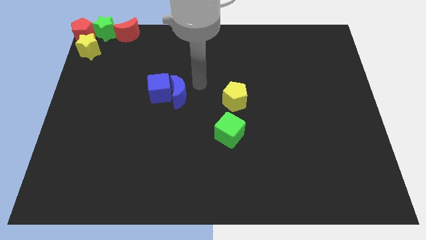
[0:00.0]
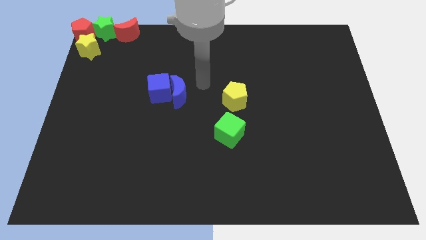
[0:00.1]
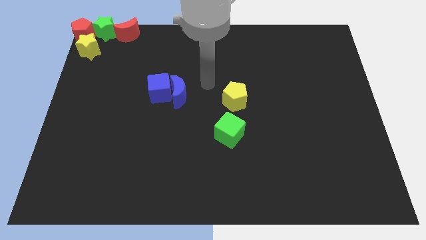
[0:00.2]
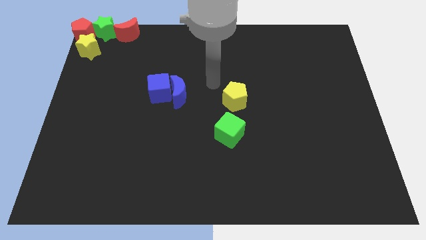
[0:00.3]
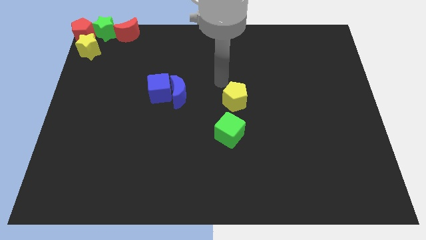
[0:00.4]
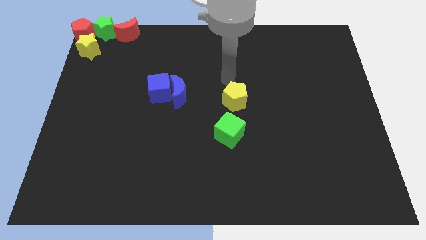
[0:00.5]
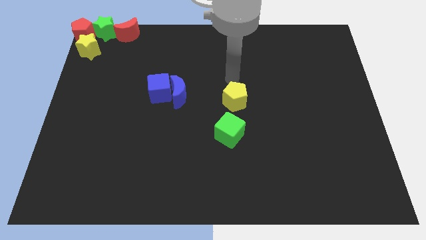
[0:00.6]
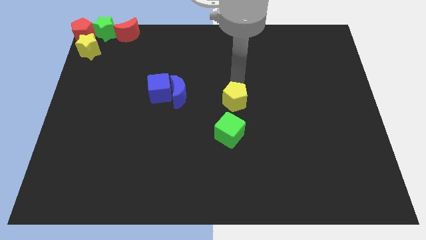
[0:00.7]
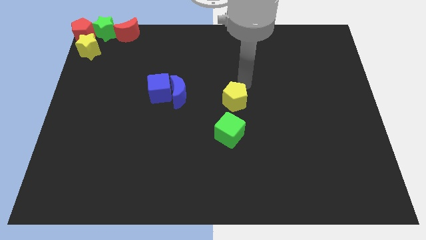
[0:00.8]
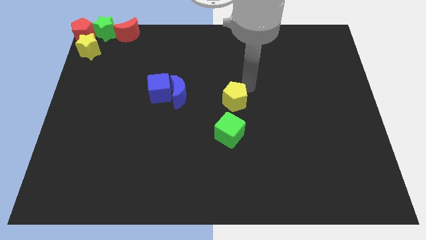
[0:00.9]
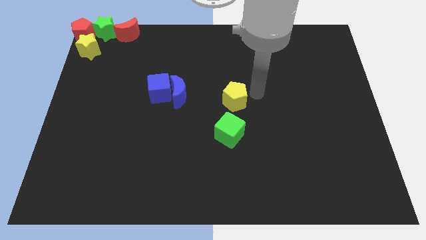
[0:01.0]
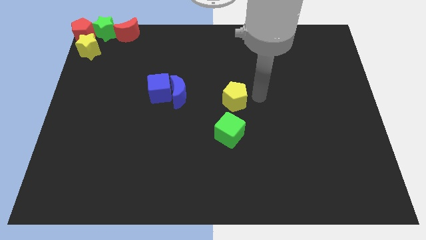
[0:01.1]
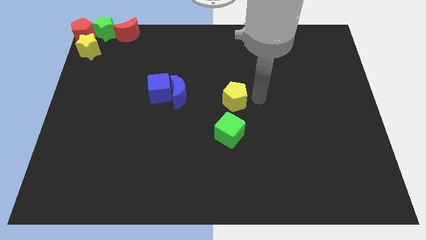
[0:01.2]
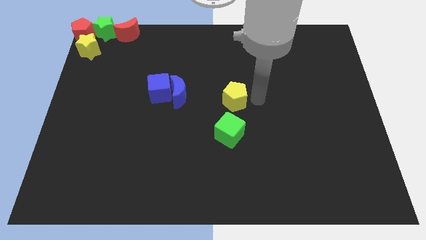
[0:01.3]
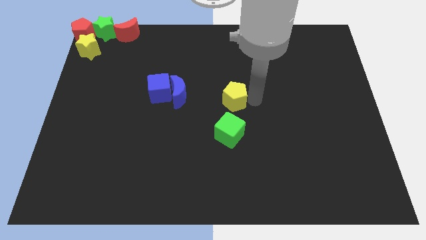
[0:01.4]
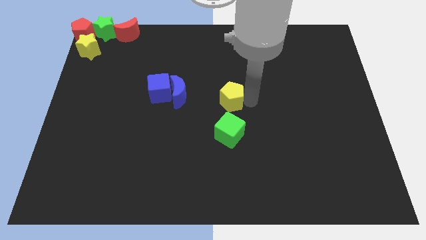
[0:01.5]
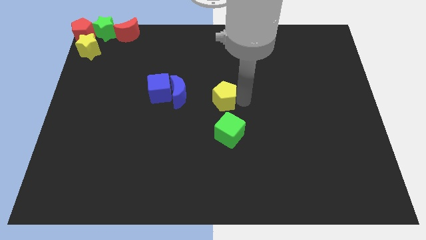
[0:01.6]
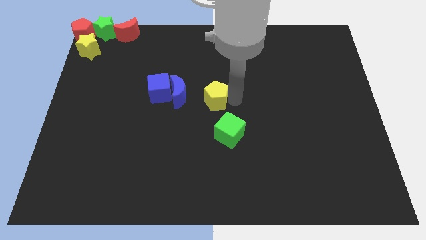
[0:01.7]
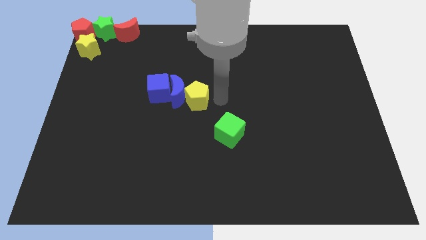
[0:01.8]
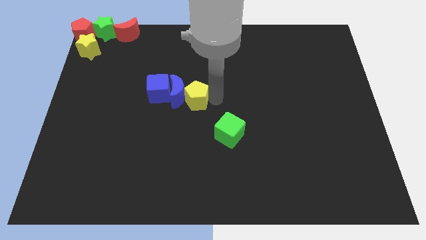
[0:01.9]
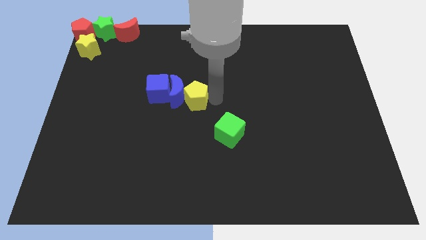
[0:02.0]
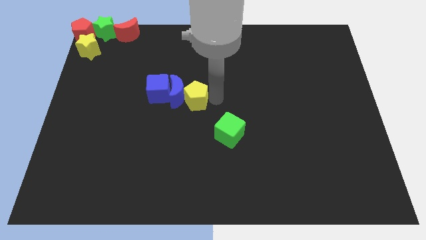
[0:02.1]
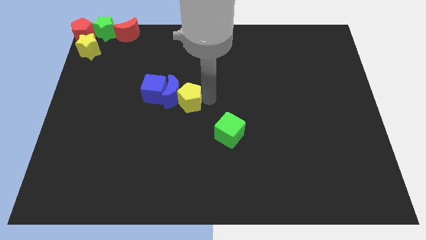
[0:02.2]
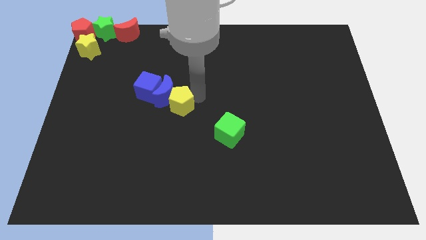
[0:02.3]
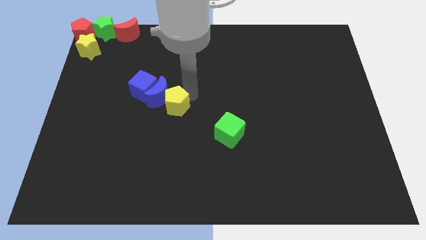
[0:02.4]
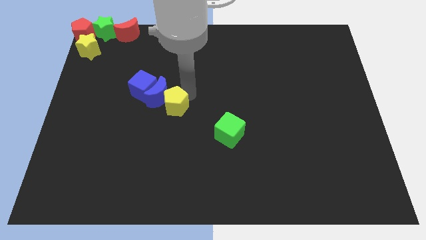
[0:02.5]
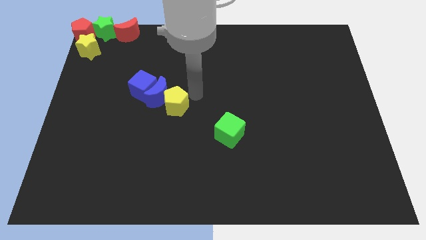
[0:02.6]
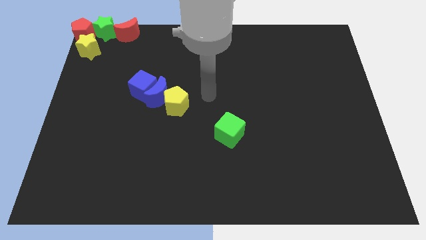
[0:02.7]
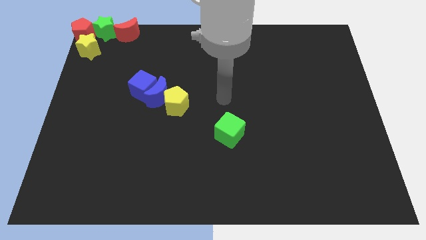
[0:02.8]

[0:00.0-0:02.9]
move yellow pentagon into blue blocks

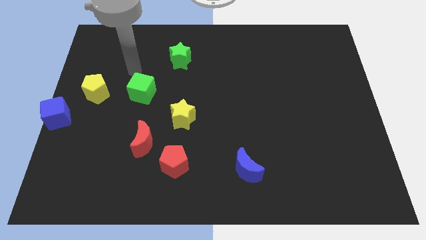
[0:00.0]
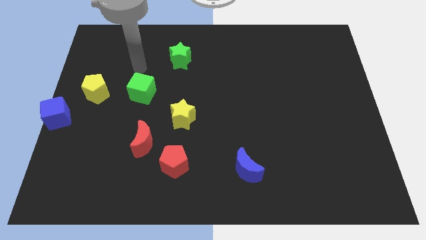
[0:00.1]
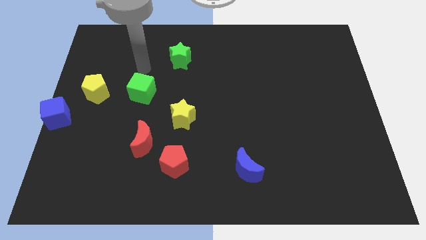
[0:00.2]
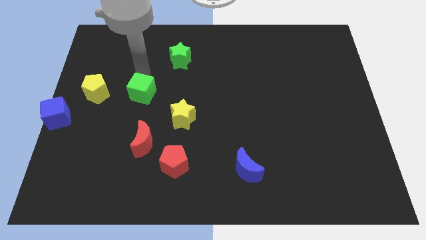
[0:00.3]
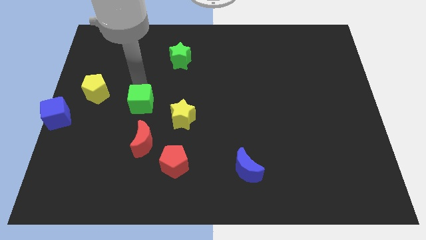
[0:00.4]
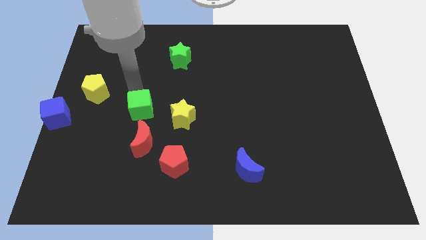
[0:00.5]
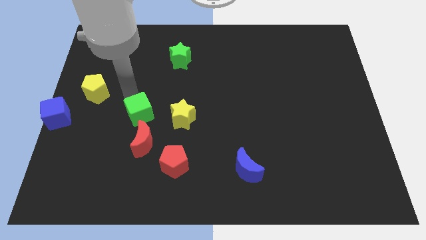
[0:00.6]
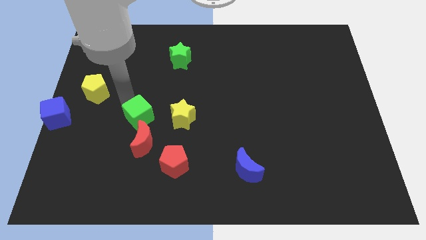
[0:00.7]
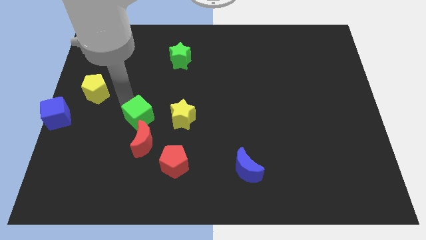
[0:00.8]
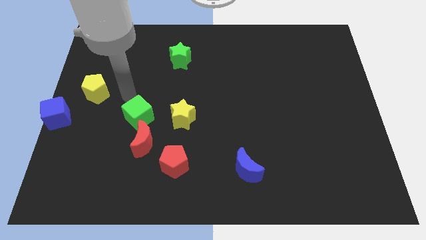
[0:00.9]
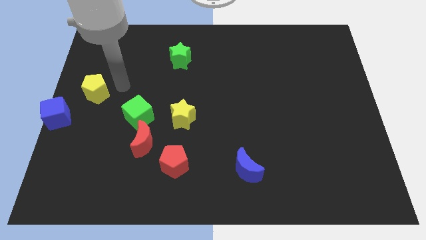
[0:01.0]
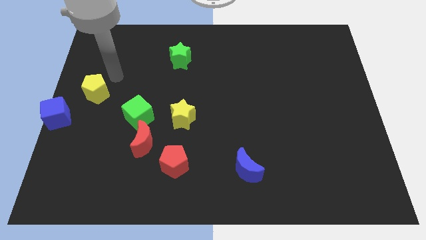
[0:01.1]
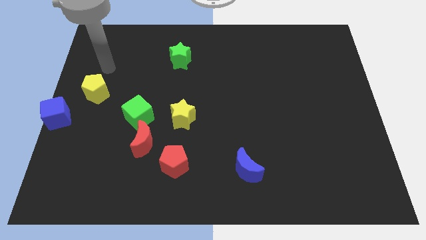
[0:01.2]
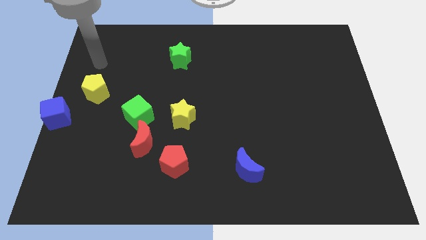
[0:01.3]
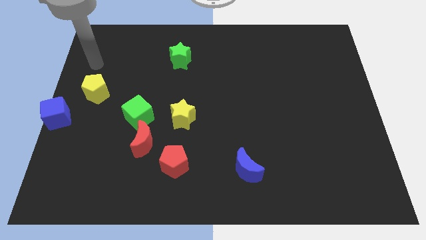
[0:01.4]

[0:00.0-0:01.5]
put the green cube at the top of red crescent

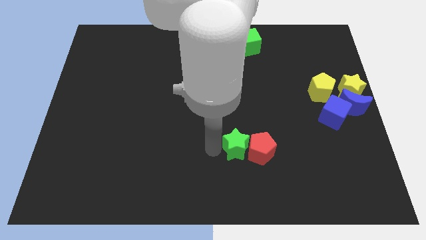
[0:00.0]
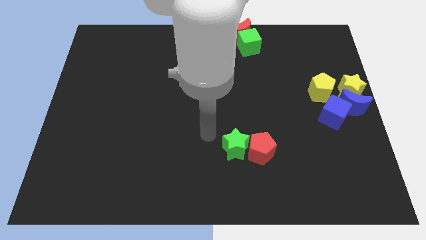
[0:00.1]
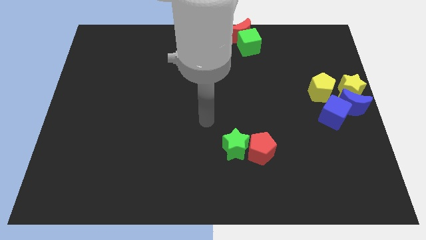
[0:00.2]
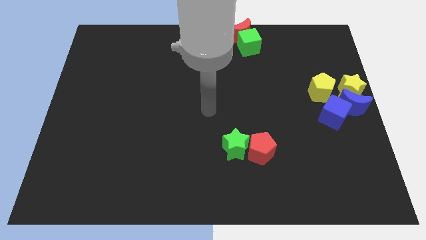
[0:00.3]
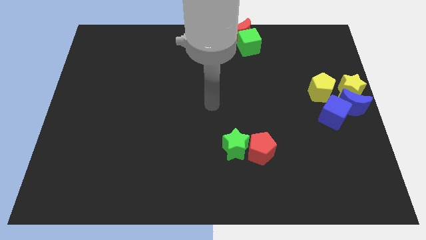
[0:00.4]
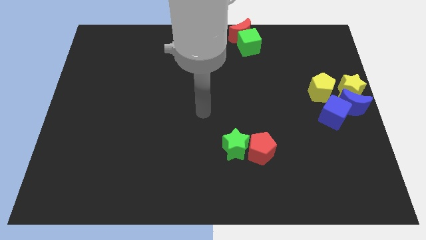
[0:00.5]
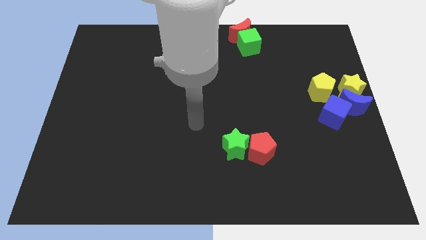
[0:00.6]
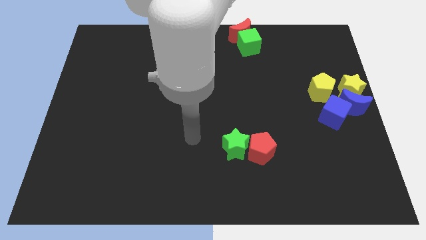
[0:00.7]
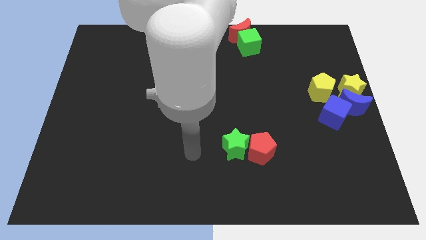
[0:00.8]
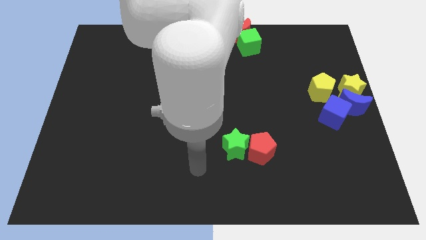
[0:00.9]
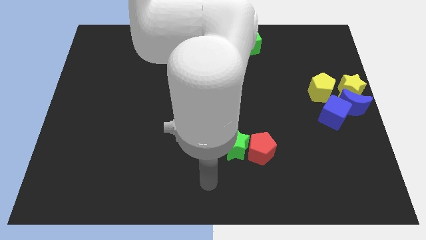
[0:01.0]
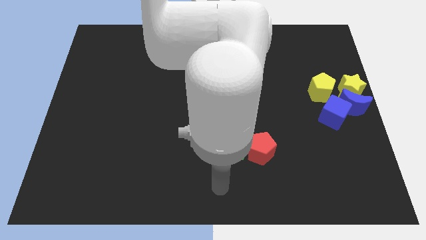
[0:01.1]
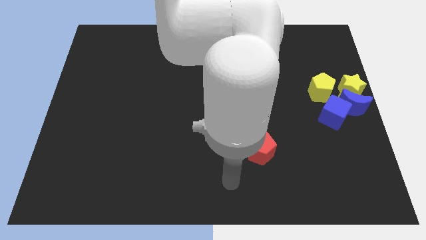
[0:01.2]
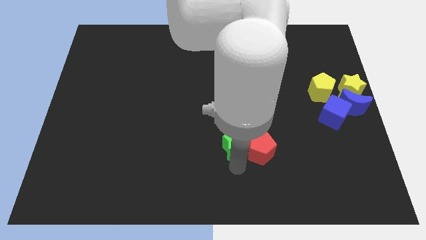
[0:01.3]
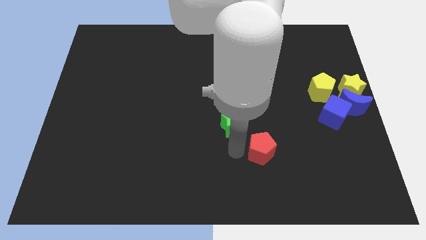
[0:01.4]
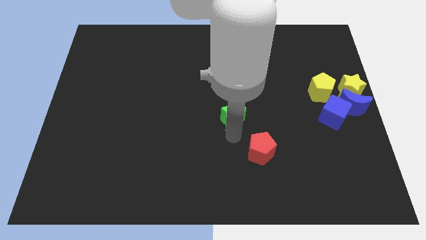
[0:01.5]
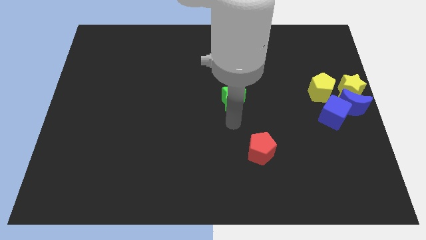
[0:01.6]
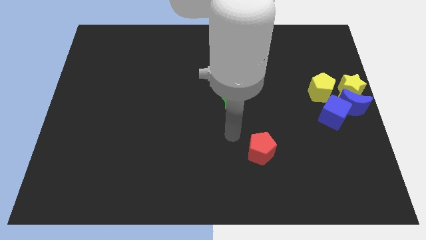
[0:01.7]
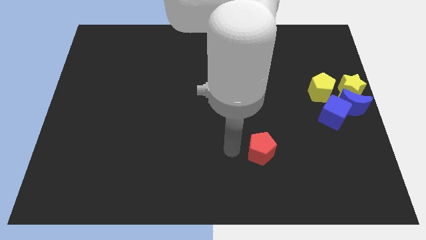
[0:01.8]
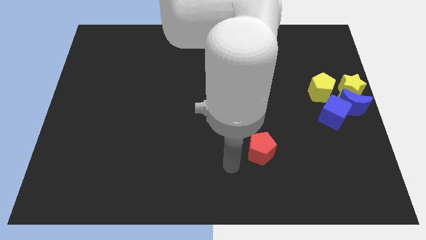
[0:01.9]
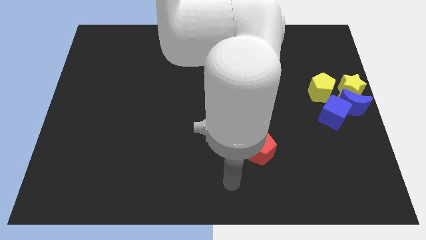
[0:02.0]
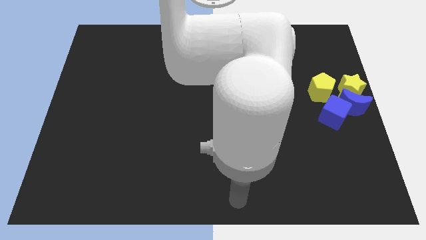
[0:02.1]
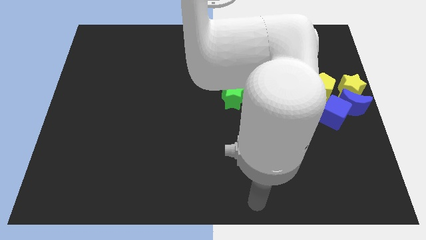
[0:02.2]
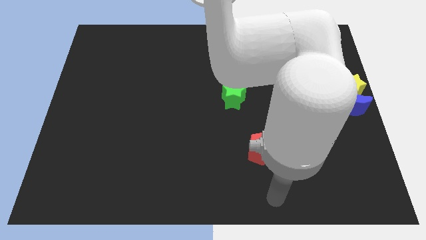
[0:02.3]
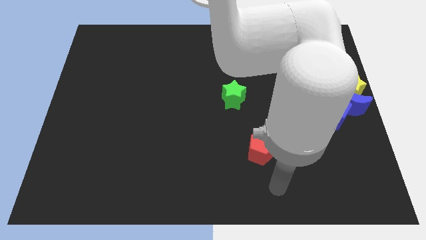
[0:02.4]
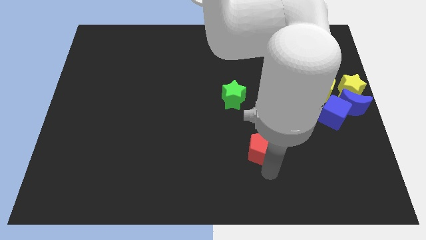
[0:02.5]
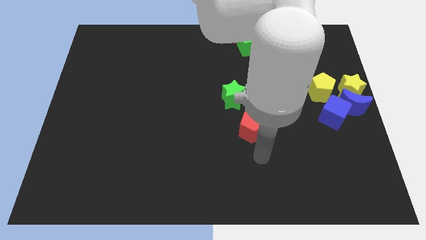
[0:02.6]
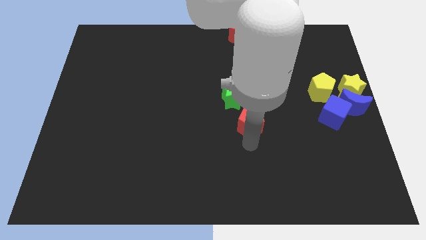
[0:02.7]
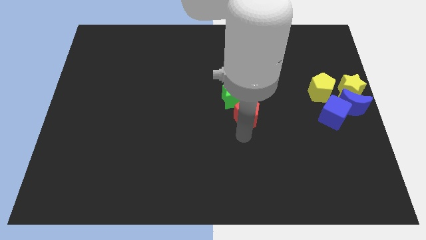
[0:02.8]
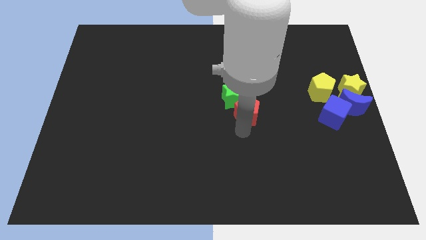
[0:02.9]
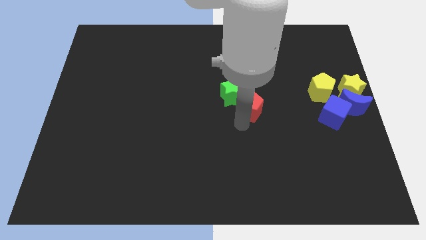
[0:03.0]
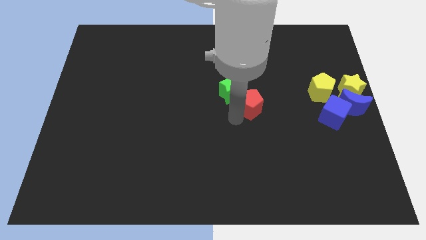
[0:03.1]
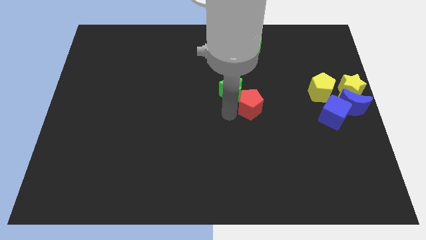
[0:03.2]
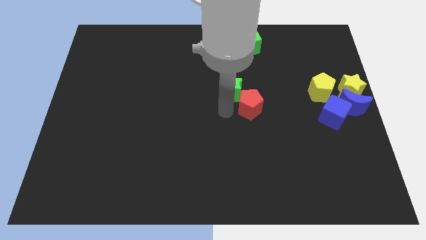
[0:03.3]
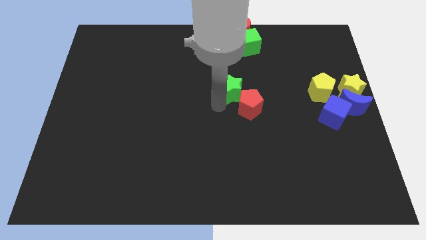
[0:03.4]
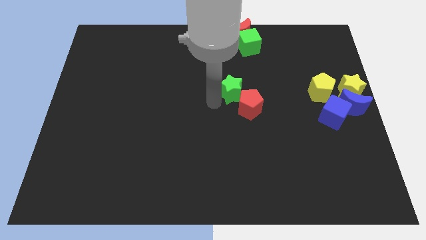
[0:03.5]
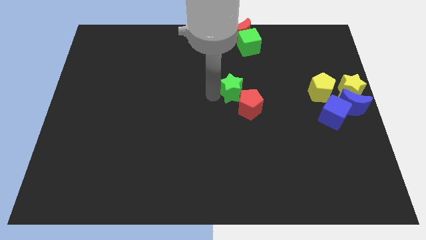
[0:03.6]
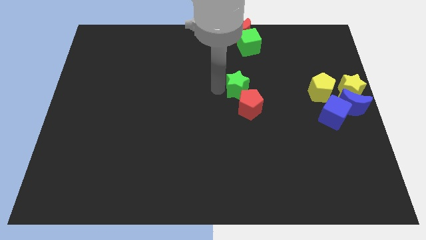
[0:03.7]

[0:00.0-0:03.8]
push the green star and red pentagon together at the left side of the yellow pentagon

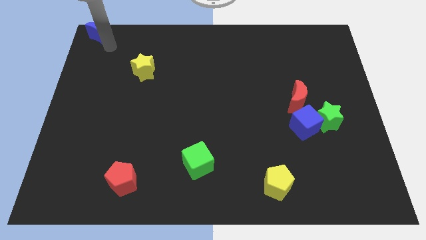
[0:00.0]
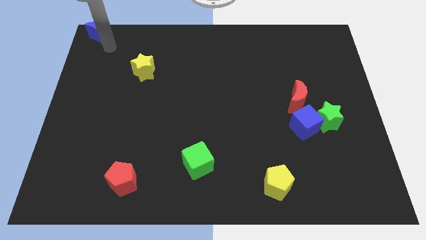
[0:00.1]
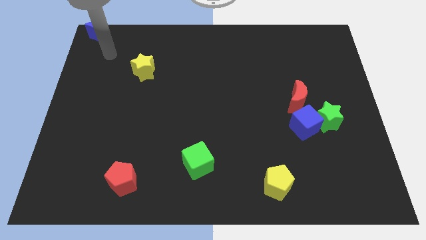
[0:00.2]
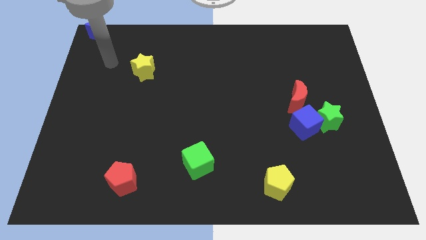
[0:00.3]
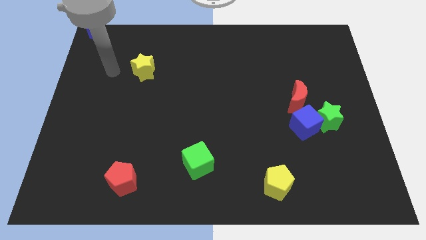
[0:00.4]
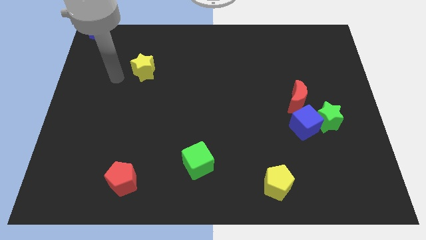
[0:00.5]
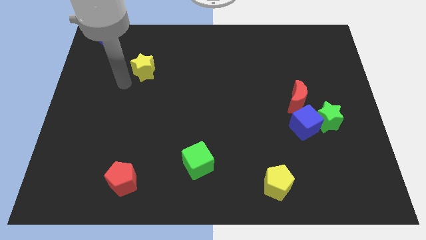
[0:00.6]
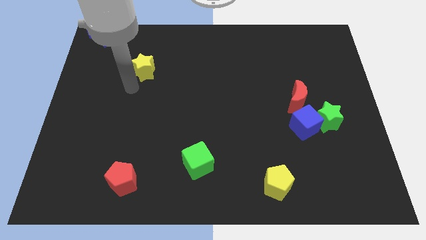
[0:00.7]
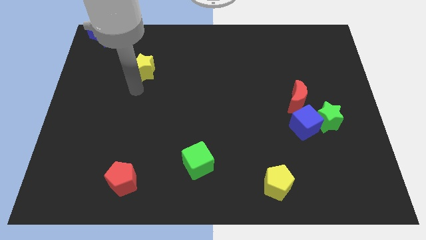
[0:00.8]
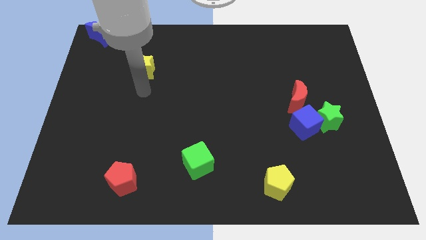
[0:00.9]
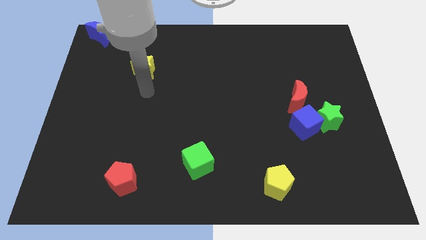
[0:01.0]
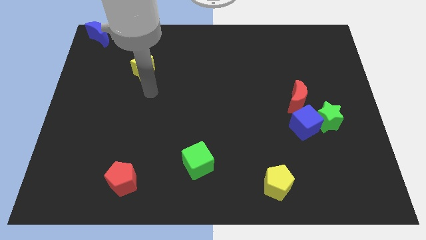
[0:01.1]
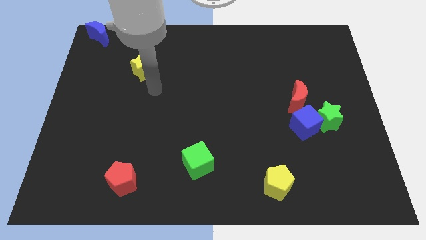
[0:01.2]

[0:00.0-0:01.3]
move the arm at the bottom of yellow star
